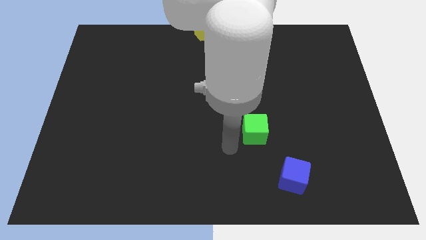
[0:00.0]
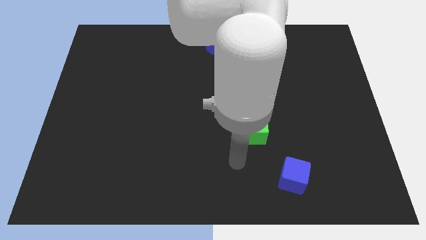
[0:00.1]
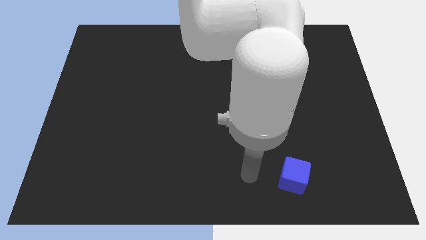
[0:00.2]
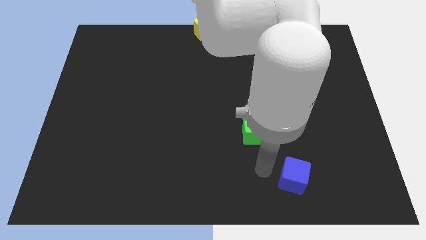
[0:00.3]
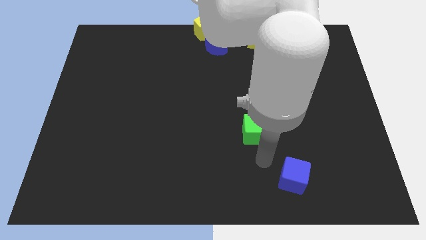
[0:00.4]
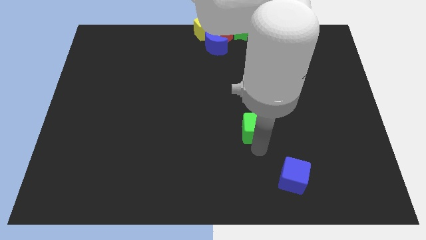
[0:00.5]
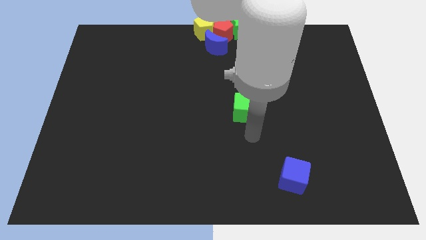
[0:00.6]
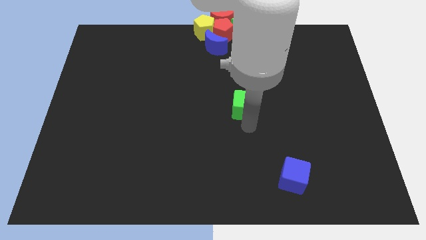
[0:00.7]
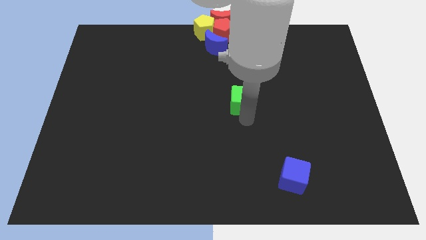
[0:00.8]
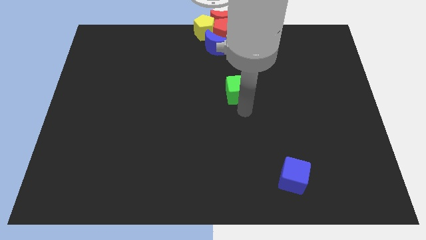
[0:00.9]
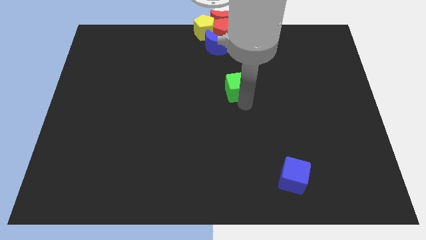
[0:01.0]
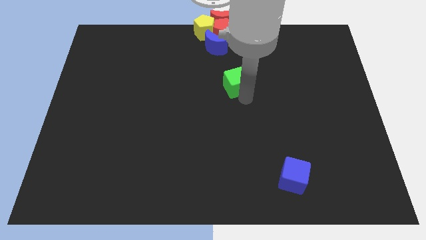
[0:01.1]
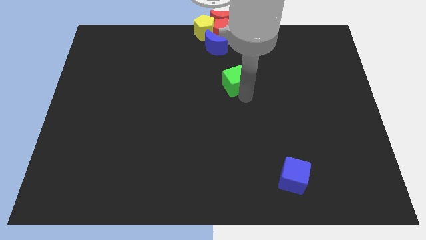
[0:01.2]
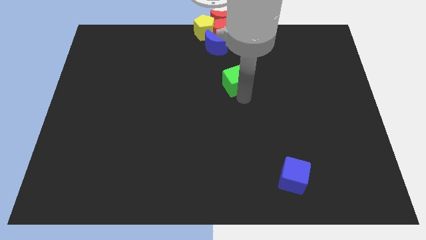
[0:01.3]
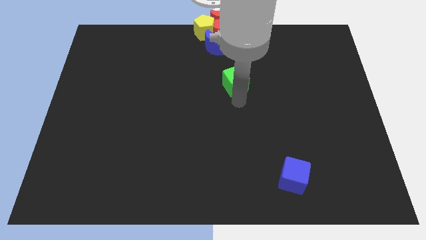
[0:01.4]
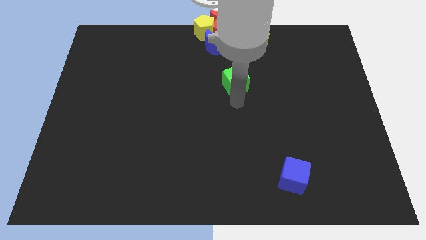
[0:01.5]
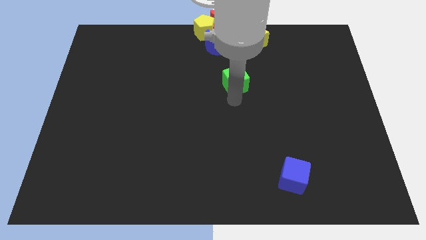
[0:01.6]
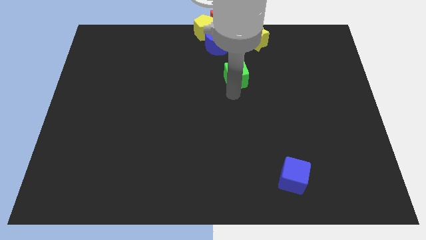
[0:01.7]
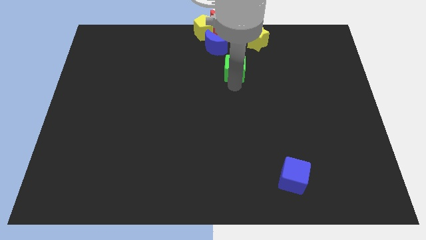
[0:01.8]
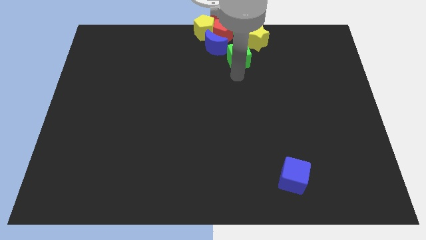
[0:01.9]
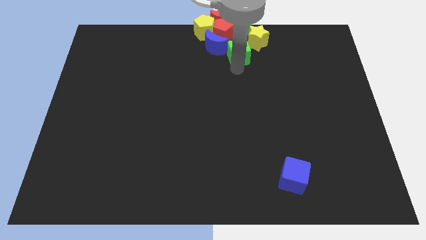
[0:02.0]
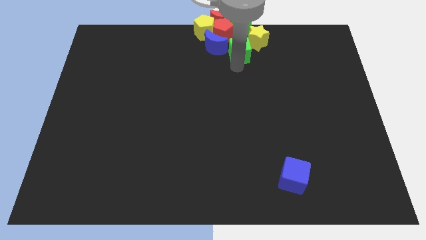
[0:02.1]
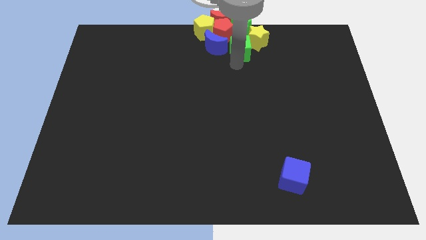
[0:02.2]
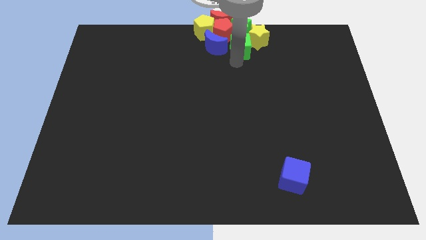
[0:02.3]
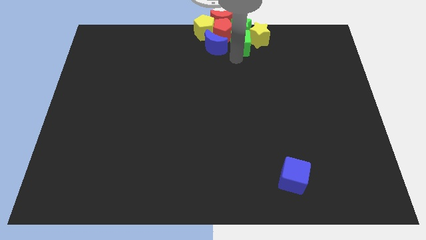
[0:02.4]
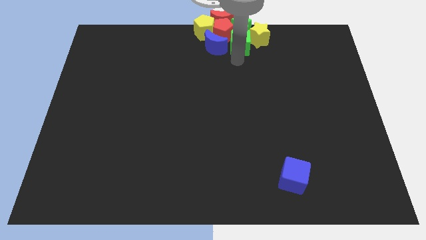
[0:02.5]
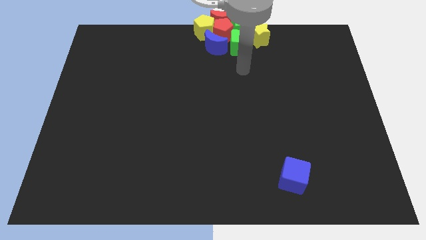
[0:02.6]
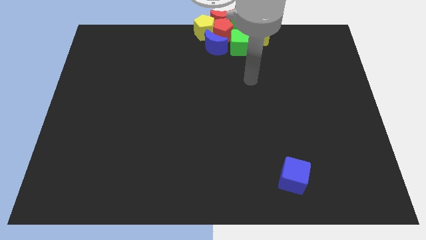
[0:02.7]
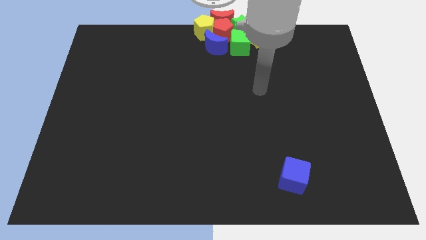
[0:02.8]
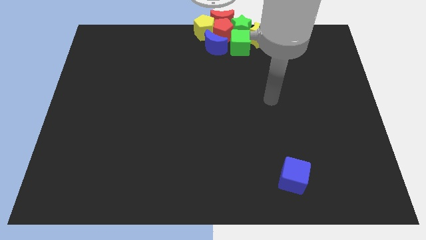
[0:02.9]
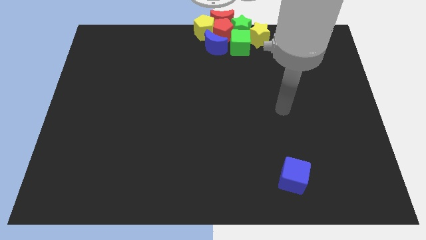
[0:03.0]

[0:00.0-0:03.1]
move the green cube to the top center

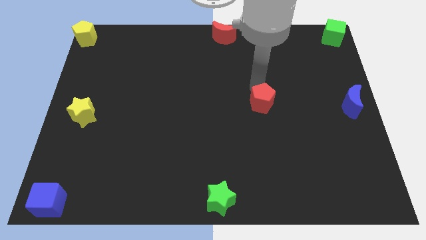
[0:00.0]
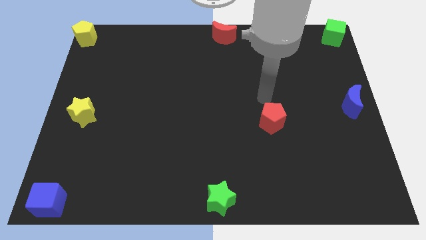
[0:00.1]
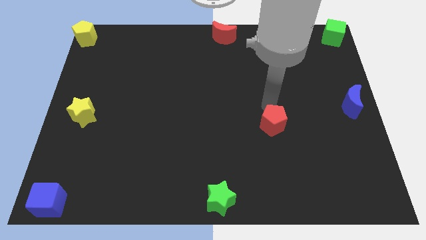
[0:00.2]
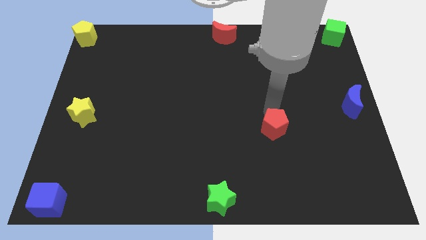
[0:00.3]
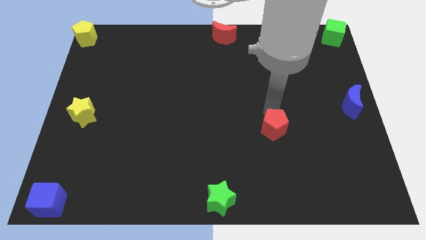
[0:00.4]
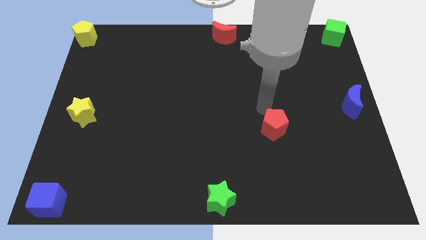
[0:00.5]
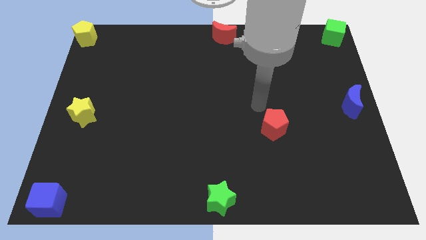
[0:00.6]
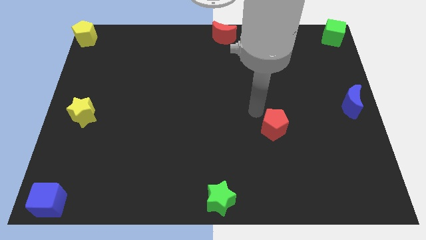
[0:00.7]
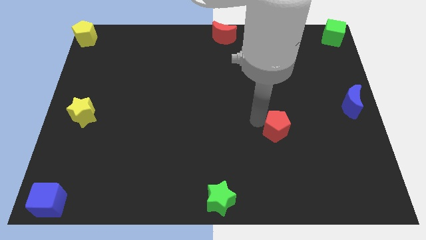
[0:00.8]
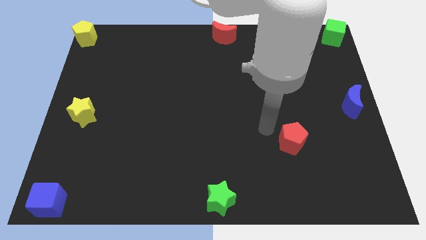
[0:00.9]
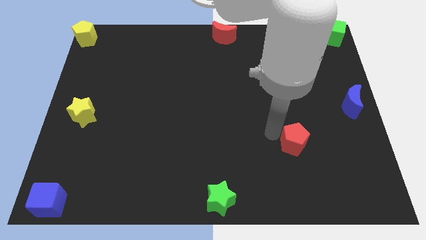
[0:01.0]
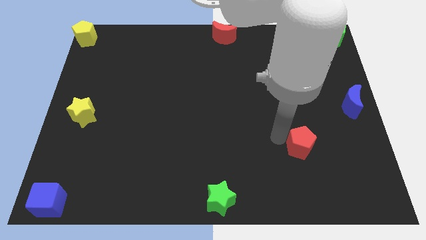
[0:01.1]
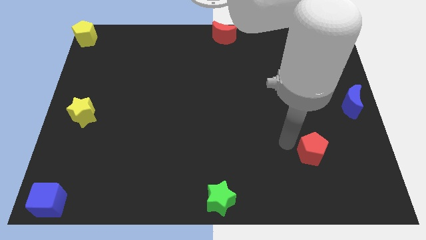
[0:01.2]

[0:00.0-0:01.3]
push the red pentagon slight right bottom of the board

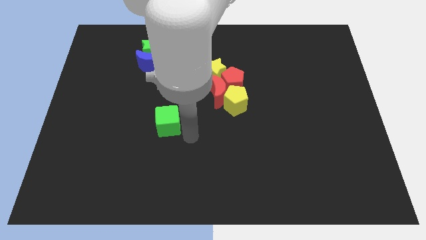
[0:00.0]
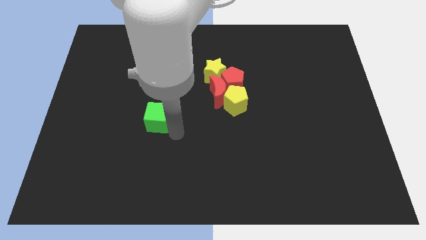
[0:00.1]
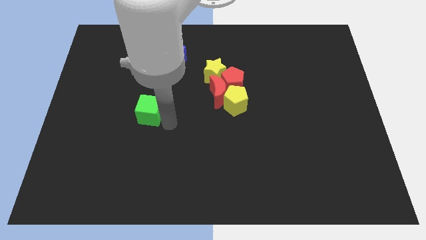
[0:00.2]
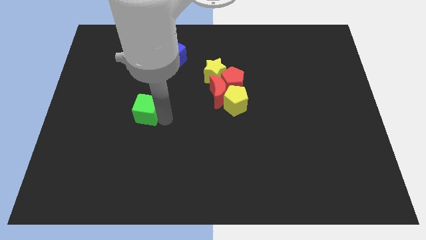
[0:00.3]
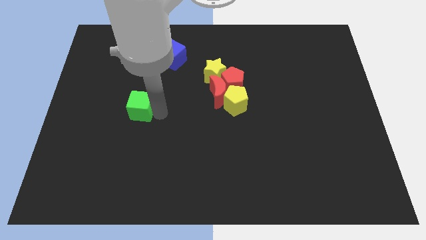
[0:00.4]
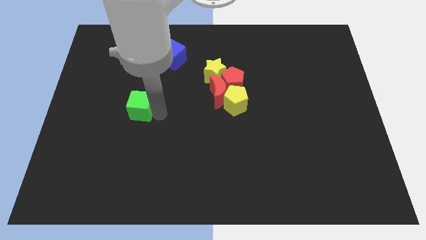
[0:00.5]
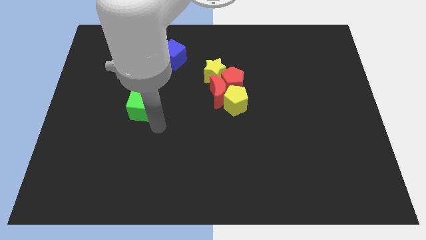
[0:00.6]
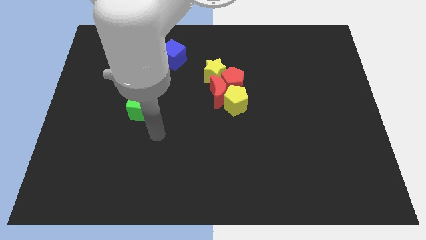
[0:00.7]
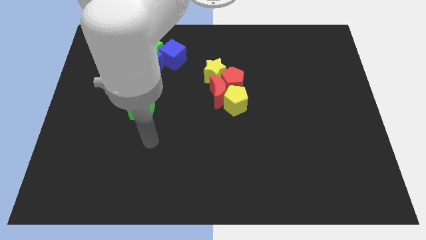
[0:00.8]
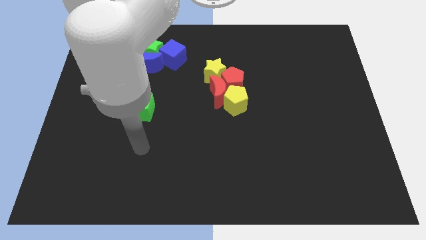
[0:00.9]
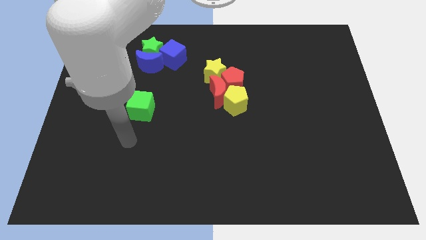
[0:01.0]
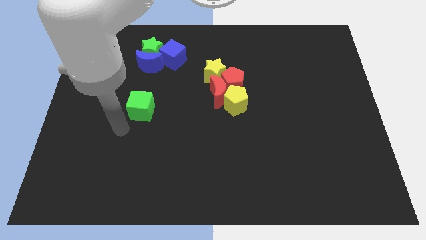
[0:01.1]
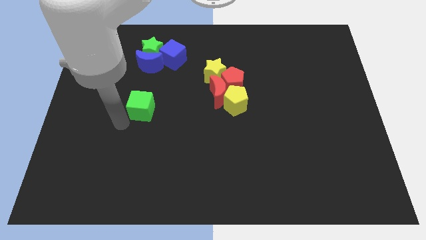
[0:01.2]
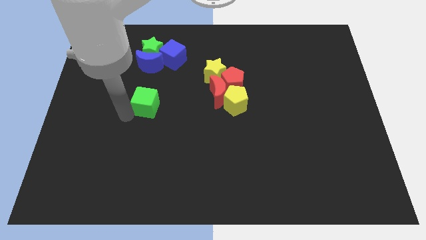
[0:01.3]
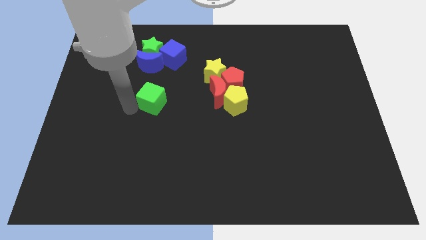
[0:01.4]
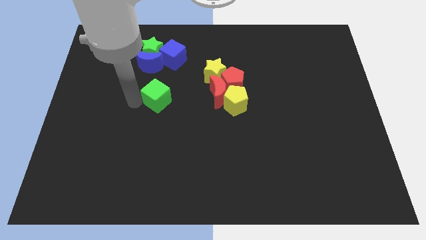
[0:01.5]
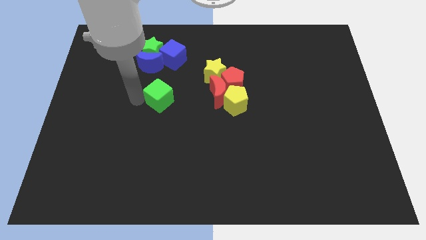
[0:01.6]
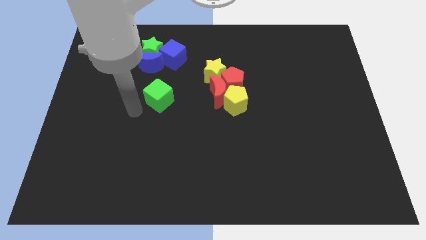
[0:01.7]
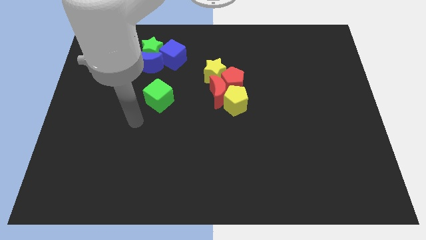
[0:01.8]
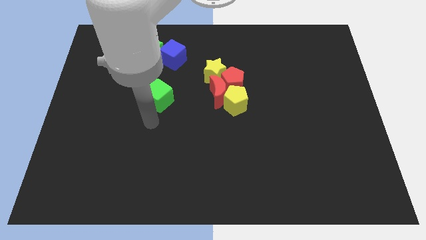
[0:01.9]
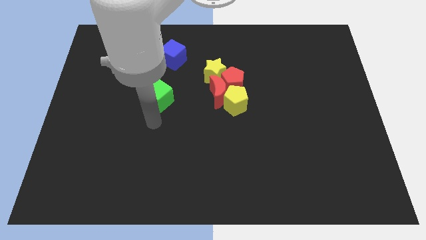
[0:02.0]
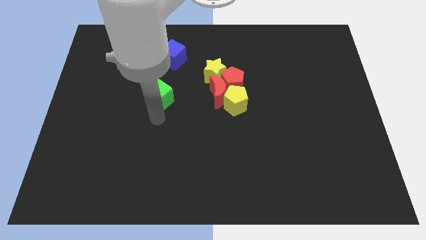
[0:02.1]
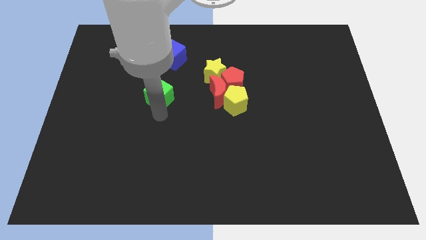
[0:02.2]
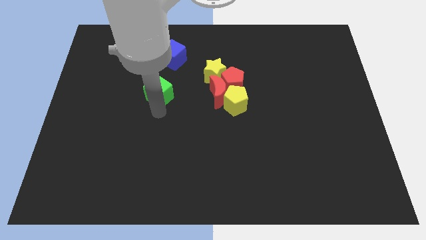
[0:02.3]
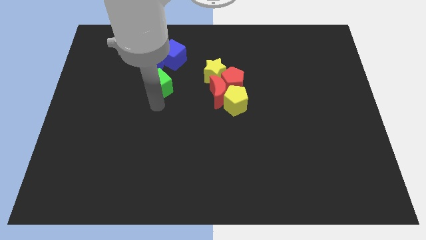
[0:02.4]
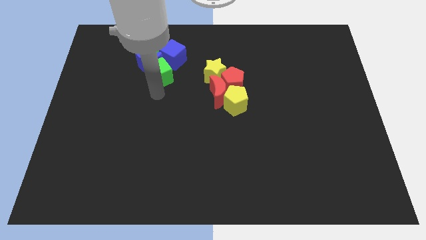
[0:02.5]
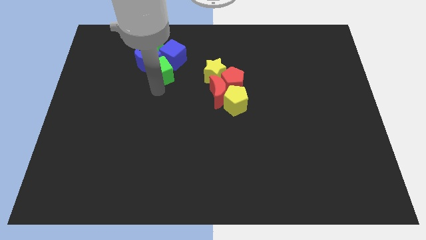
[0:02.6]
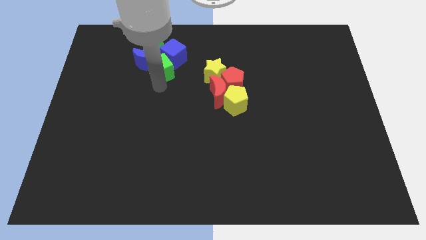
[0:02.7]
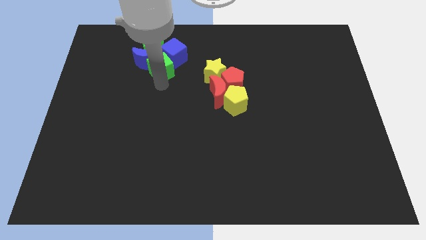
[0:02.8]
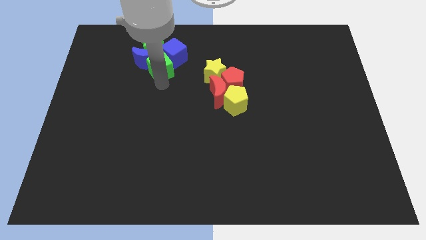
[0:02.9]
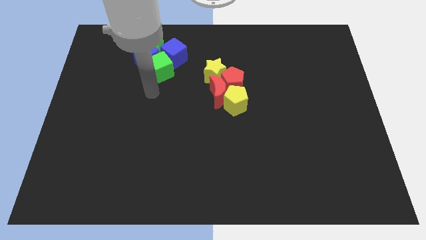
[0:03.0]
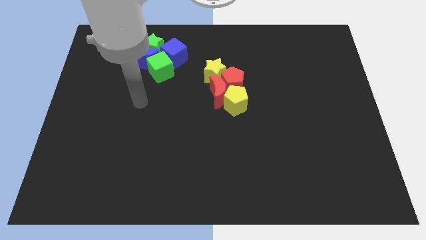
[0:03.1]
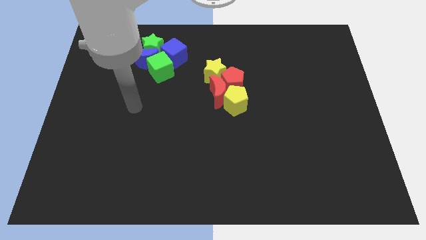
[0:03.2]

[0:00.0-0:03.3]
push the green cube into the group of blocks

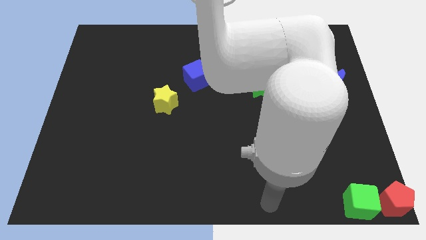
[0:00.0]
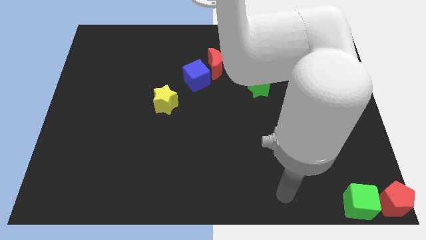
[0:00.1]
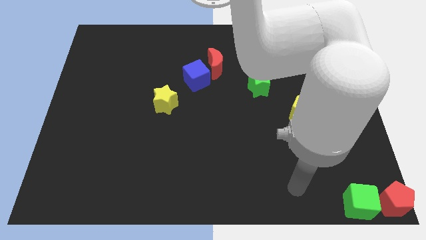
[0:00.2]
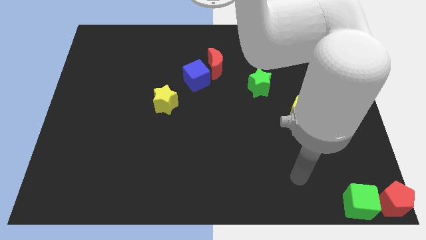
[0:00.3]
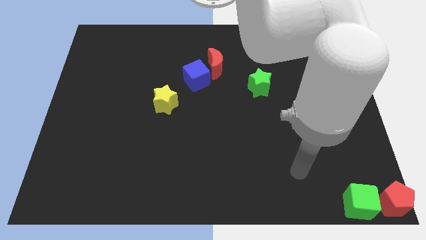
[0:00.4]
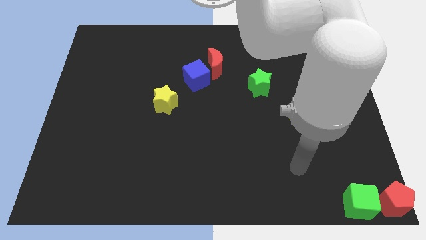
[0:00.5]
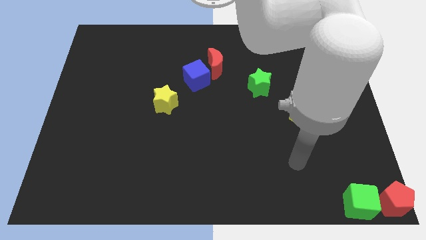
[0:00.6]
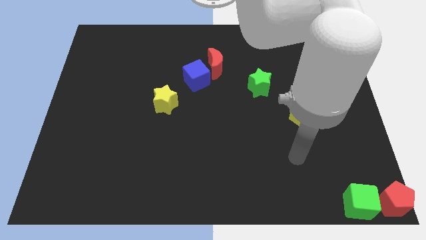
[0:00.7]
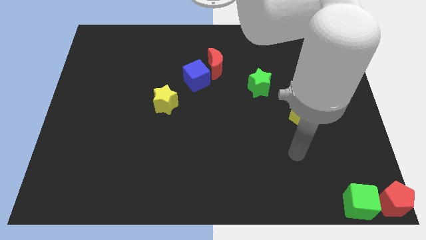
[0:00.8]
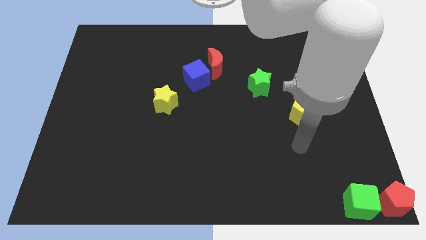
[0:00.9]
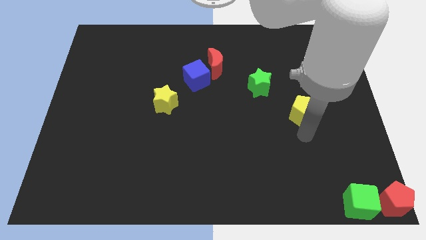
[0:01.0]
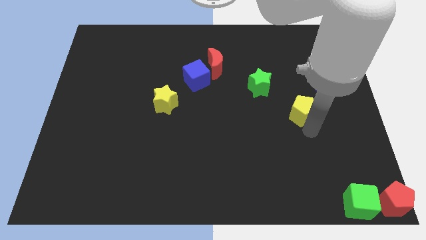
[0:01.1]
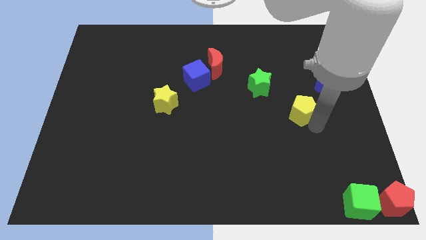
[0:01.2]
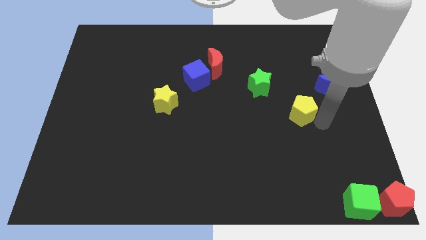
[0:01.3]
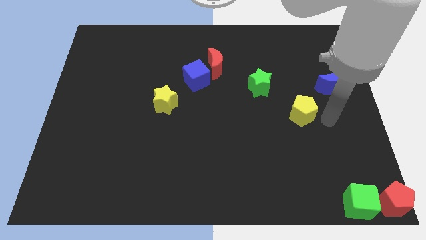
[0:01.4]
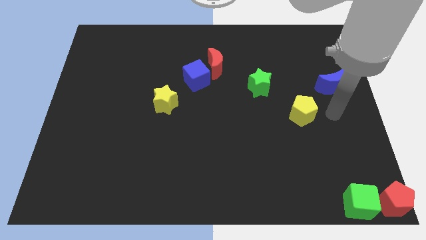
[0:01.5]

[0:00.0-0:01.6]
point your arm at the right of the yellow pentagon
